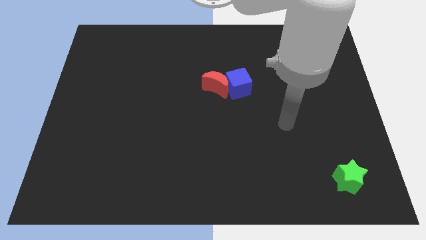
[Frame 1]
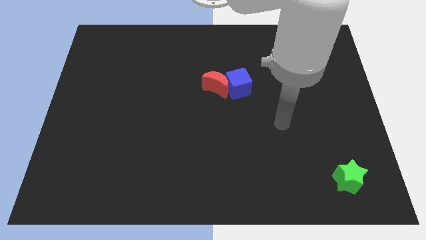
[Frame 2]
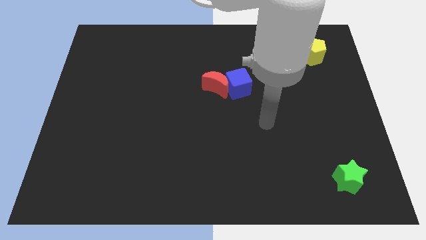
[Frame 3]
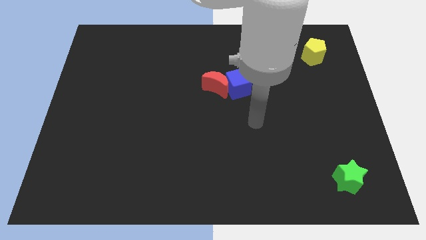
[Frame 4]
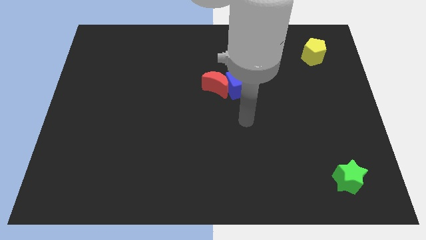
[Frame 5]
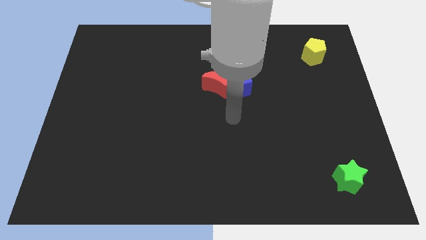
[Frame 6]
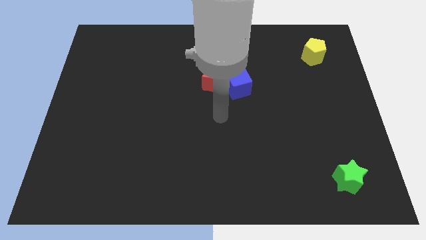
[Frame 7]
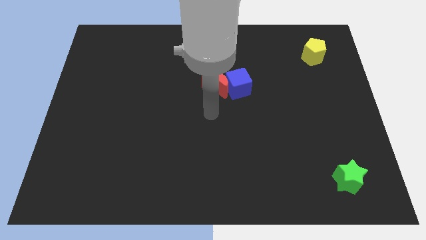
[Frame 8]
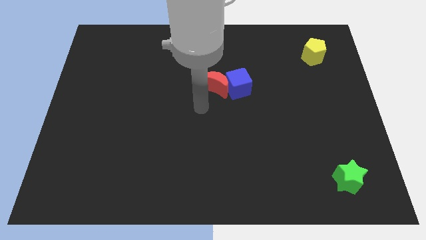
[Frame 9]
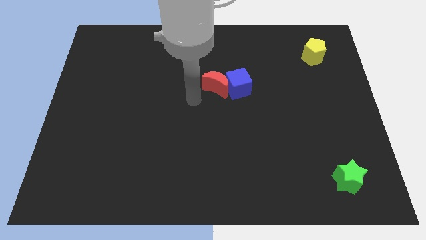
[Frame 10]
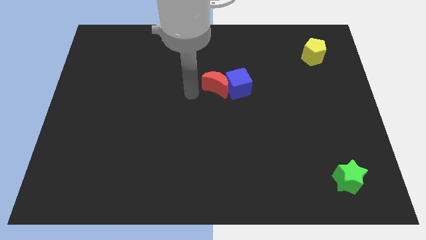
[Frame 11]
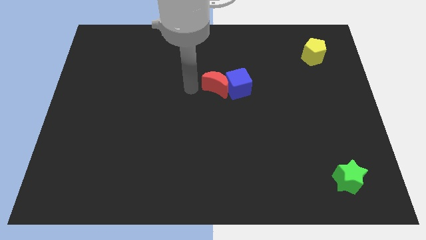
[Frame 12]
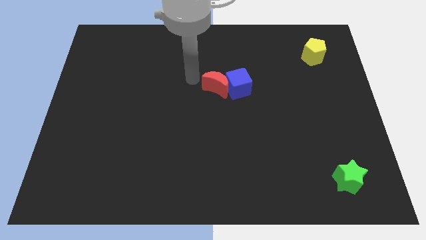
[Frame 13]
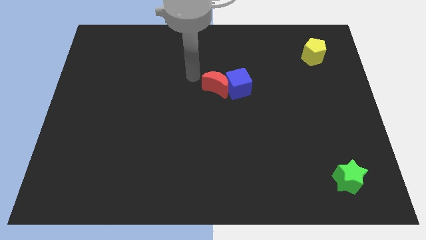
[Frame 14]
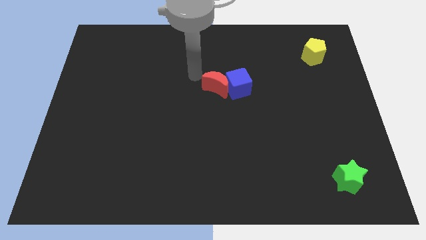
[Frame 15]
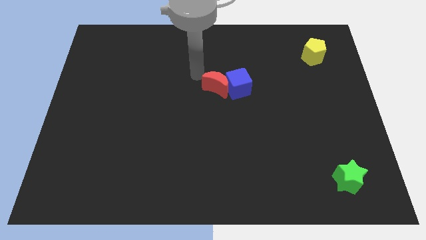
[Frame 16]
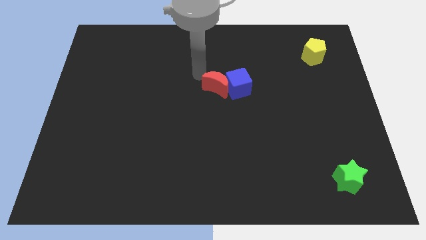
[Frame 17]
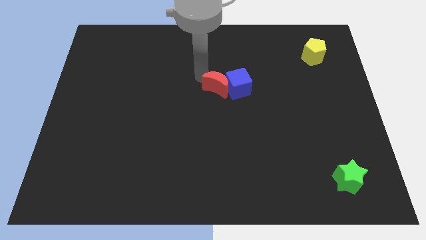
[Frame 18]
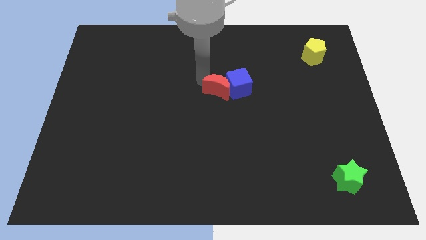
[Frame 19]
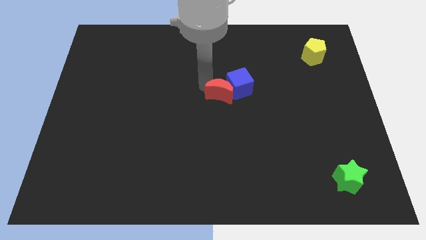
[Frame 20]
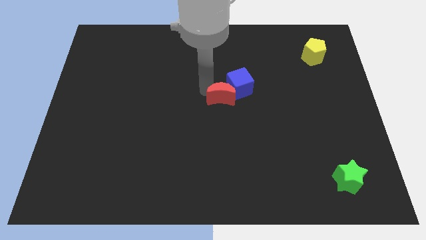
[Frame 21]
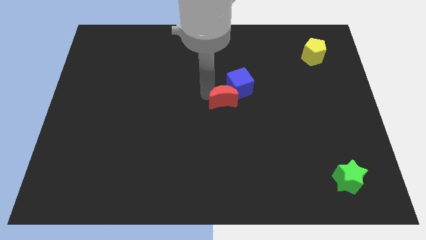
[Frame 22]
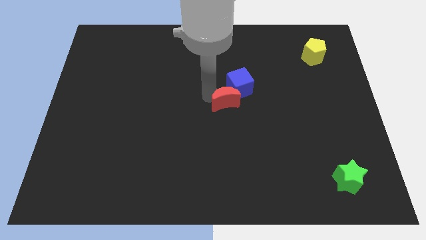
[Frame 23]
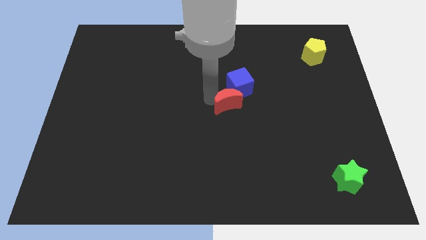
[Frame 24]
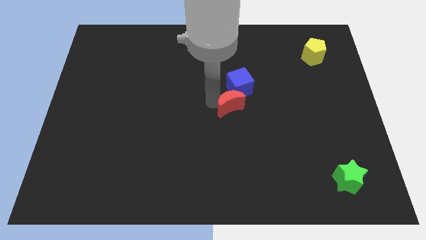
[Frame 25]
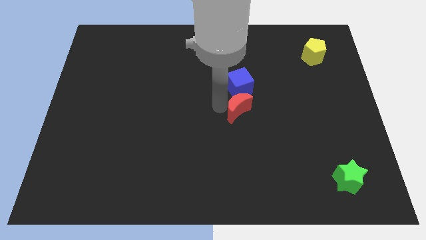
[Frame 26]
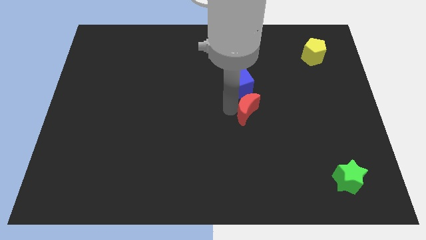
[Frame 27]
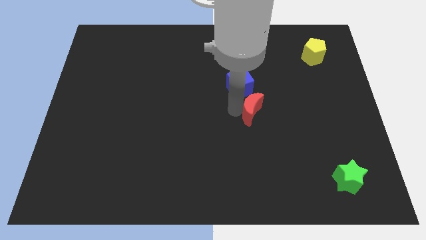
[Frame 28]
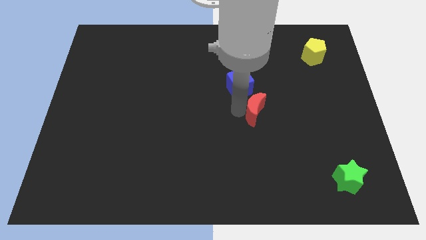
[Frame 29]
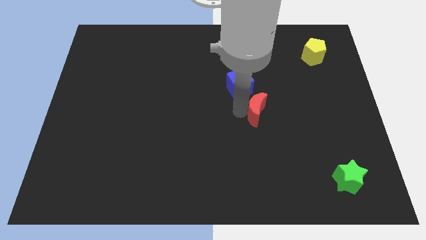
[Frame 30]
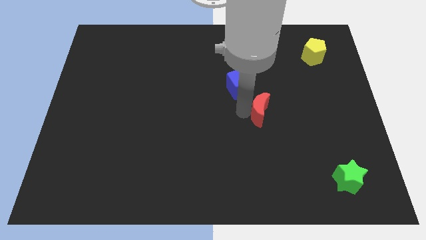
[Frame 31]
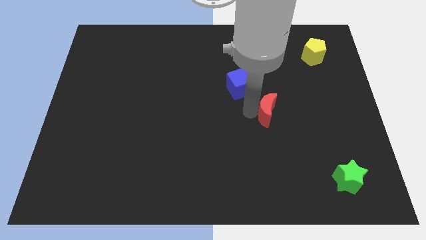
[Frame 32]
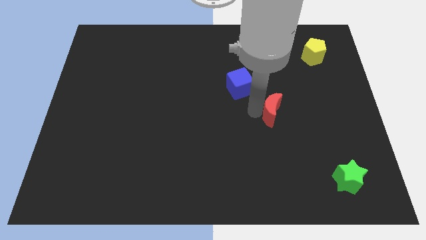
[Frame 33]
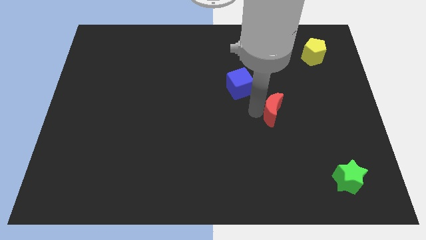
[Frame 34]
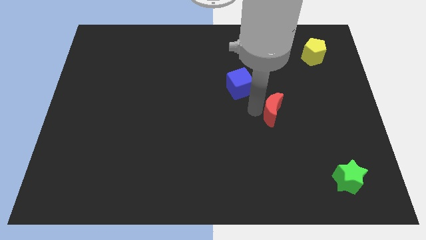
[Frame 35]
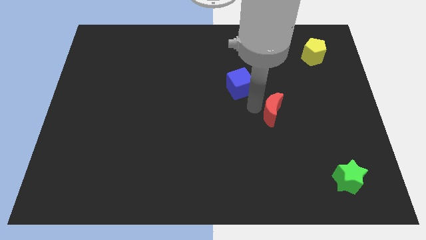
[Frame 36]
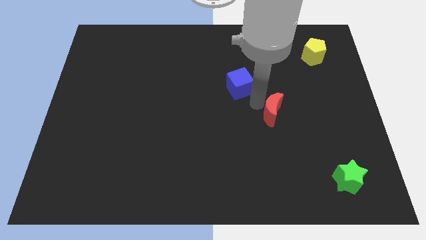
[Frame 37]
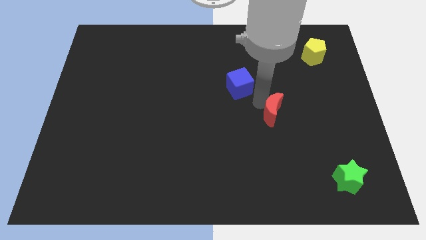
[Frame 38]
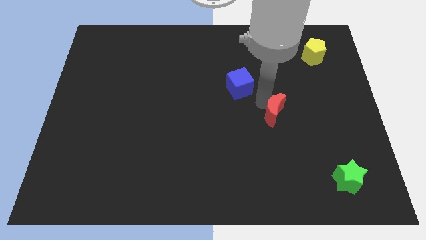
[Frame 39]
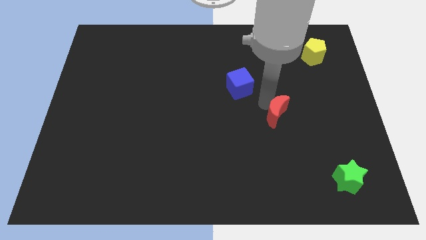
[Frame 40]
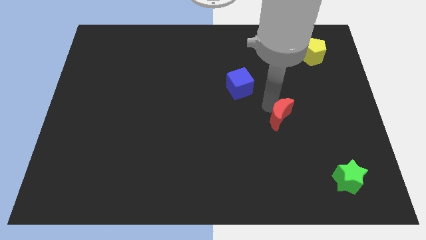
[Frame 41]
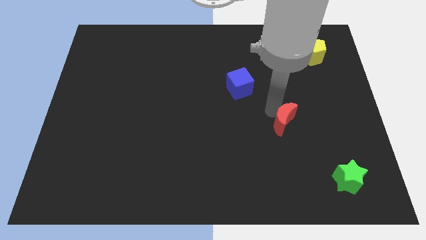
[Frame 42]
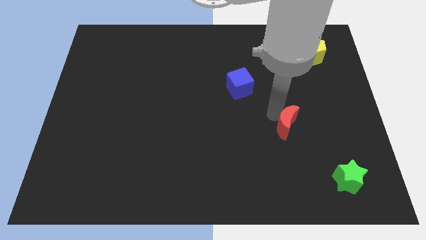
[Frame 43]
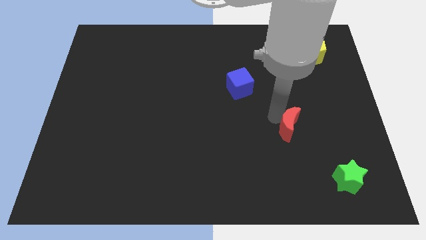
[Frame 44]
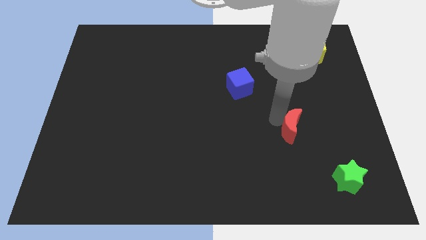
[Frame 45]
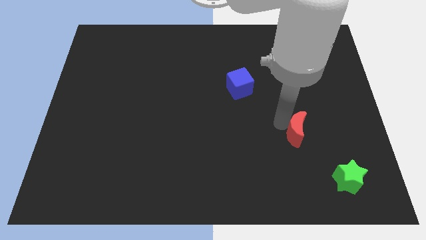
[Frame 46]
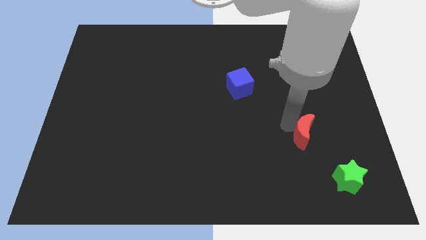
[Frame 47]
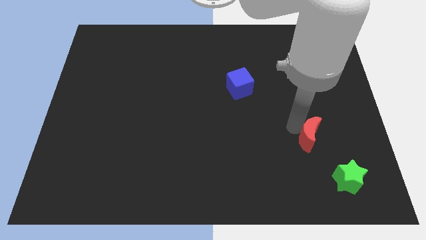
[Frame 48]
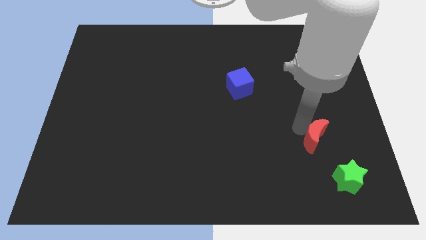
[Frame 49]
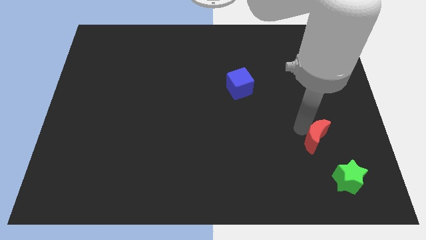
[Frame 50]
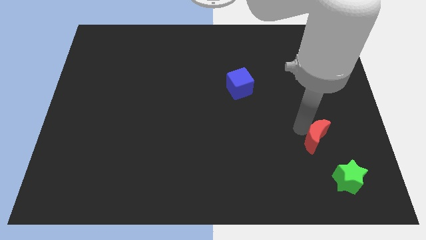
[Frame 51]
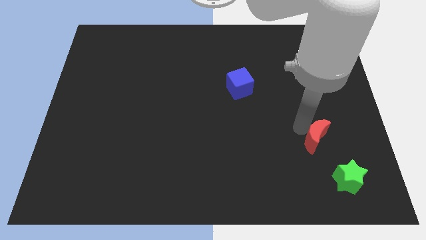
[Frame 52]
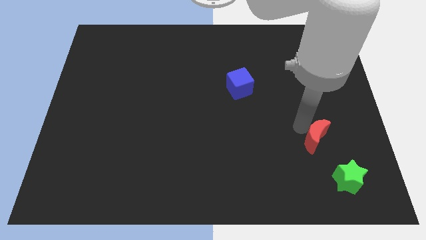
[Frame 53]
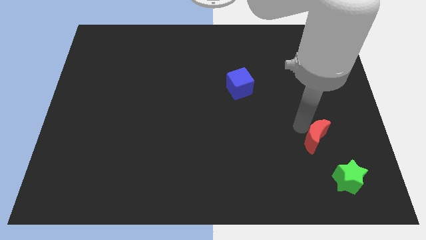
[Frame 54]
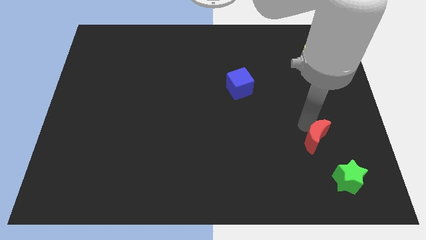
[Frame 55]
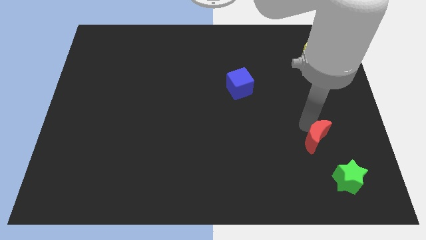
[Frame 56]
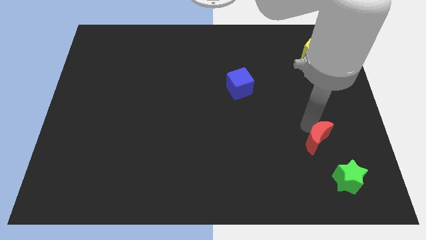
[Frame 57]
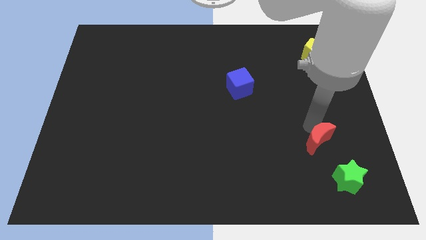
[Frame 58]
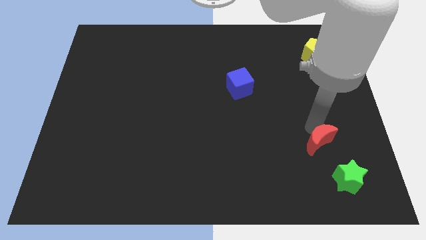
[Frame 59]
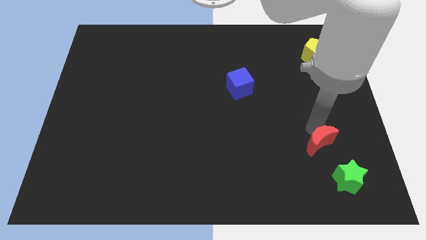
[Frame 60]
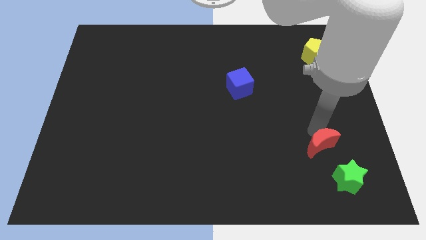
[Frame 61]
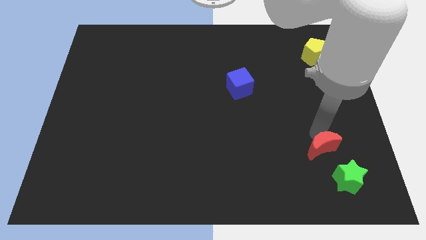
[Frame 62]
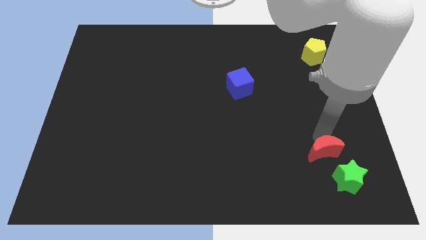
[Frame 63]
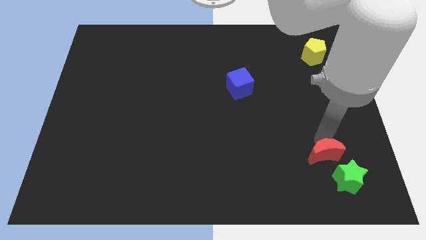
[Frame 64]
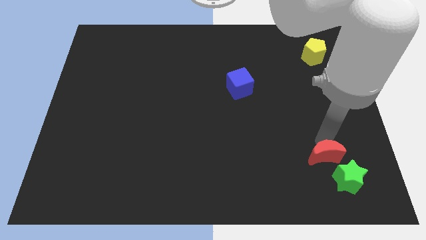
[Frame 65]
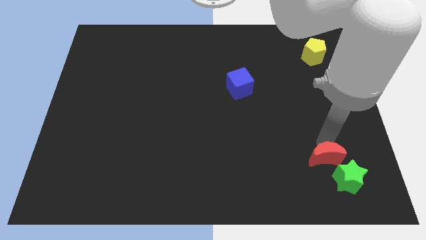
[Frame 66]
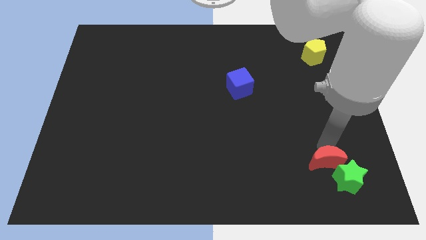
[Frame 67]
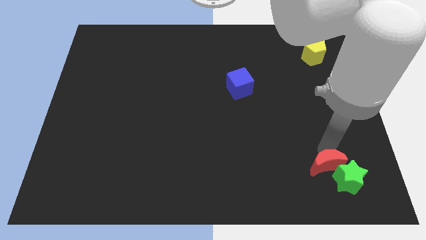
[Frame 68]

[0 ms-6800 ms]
push the red moon towards the green block

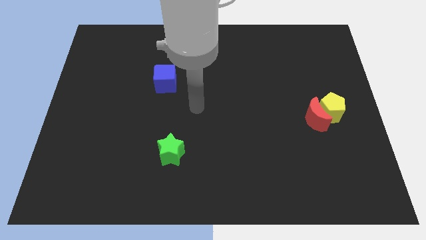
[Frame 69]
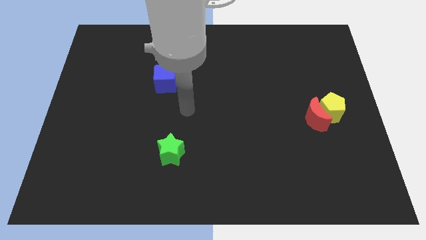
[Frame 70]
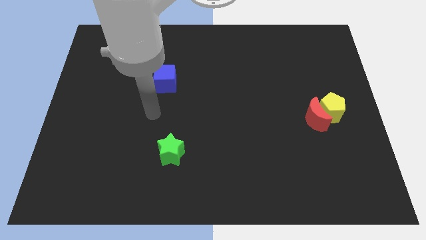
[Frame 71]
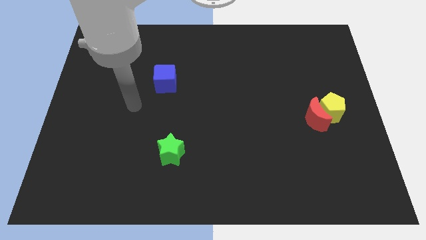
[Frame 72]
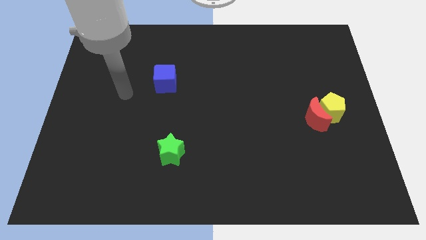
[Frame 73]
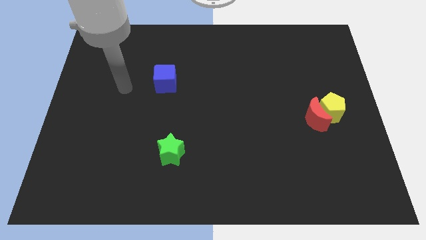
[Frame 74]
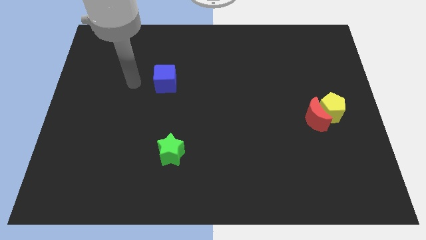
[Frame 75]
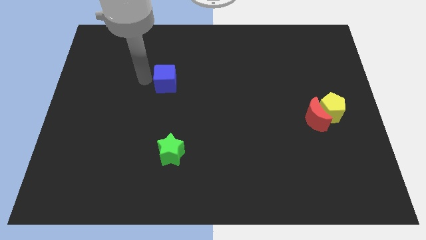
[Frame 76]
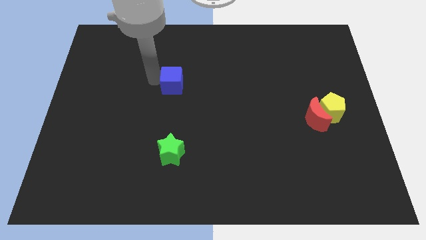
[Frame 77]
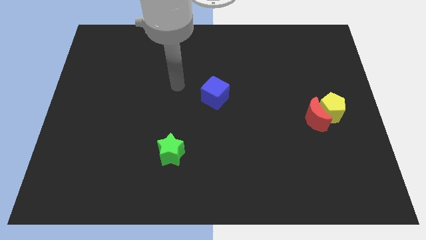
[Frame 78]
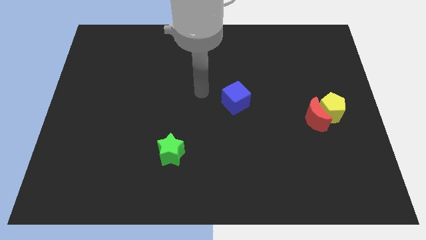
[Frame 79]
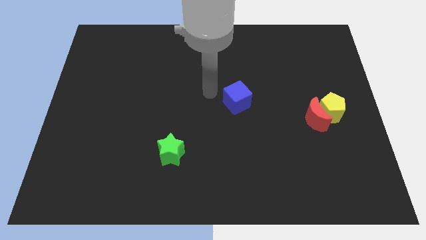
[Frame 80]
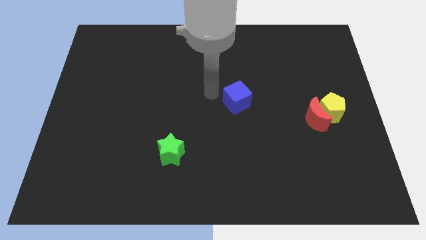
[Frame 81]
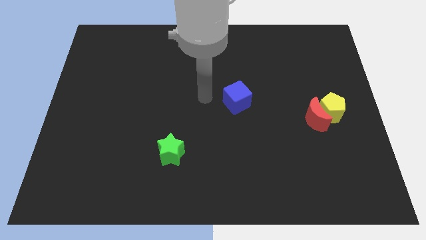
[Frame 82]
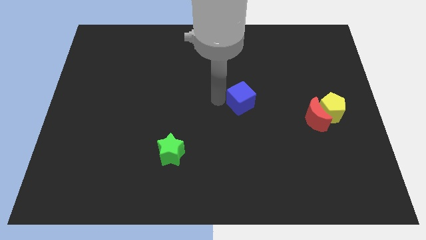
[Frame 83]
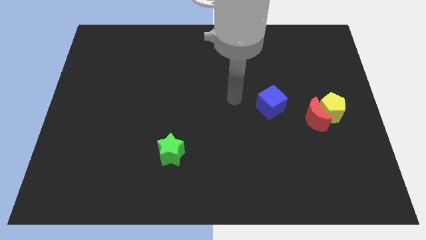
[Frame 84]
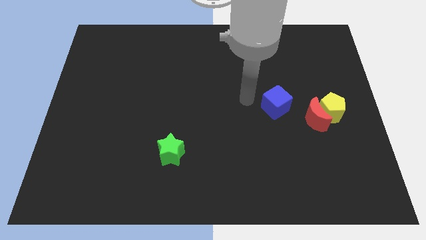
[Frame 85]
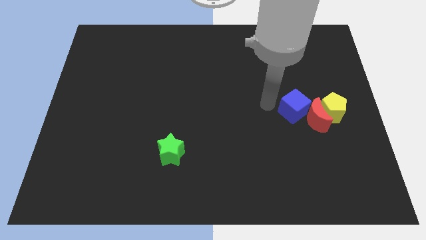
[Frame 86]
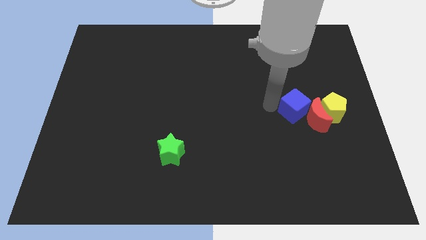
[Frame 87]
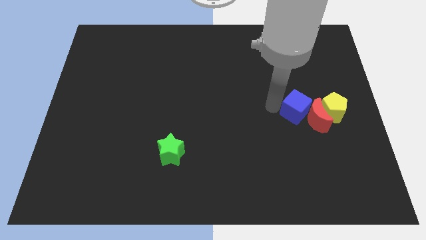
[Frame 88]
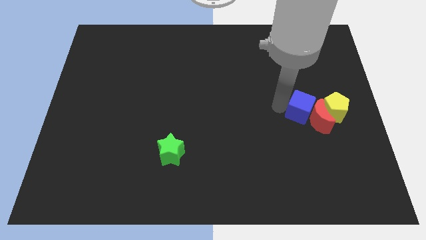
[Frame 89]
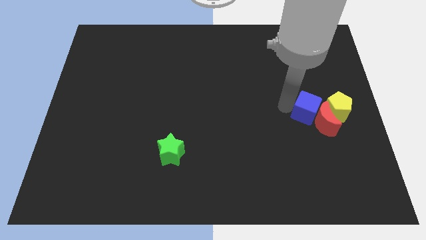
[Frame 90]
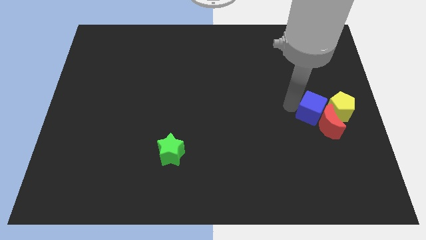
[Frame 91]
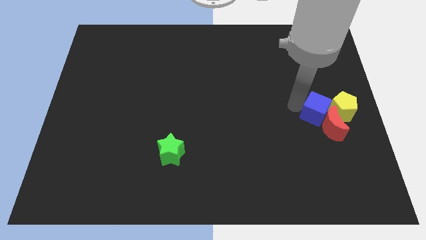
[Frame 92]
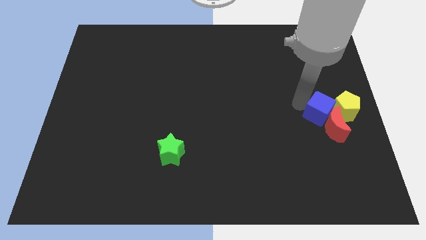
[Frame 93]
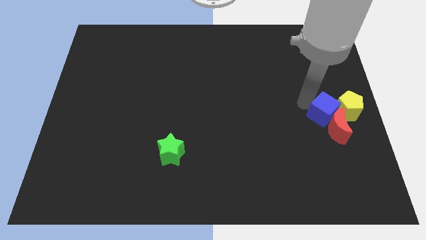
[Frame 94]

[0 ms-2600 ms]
move the cube to the pentagon
